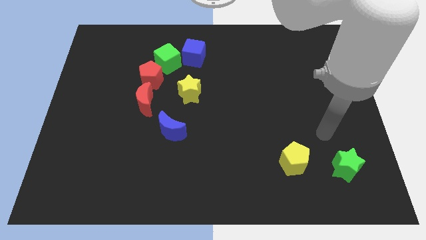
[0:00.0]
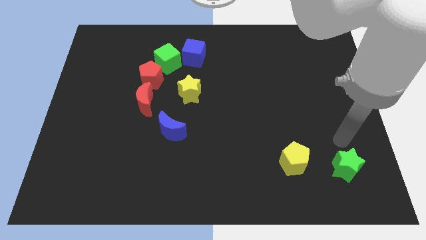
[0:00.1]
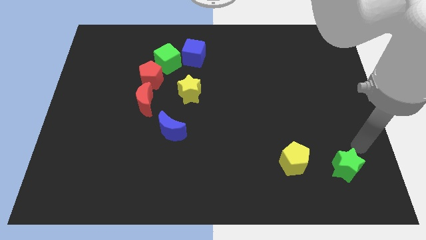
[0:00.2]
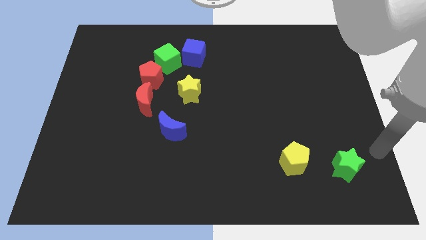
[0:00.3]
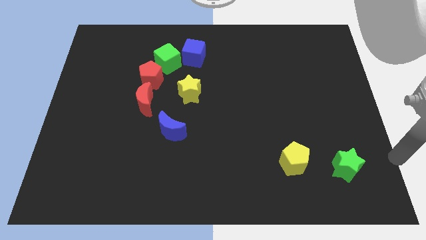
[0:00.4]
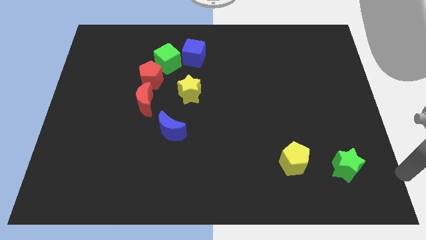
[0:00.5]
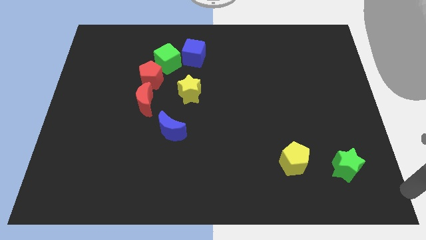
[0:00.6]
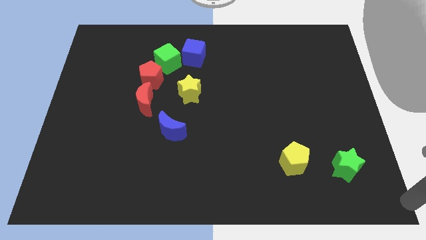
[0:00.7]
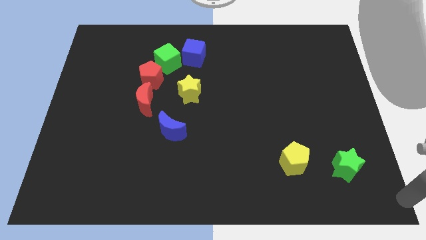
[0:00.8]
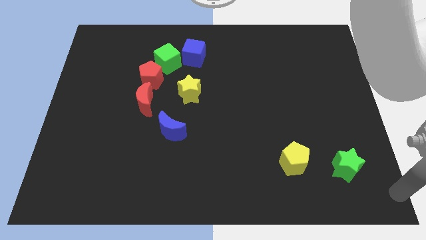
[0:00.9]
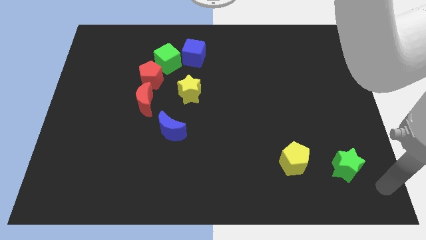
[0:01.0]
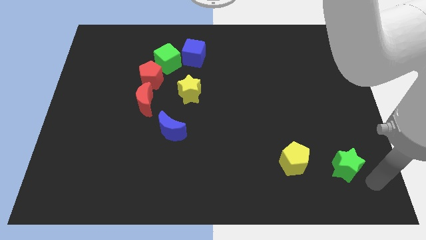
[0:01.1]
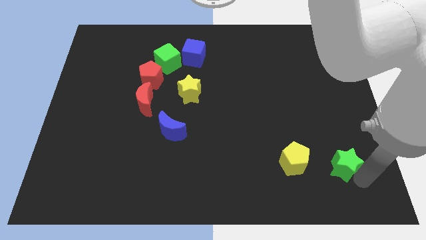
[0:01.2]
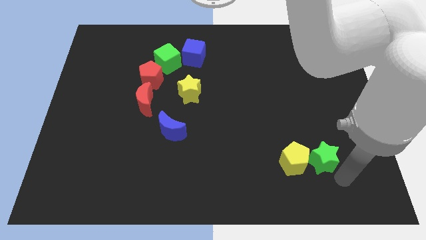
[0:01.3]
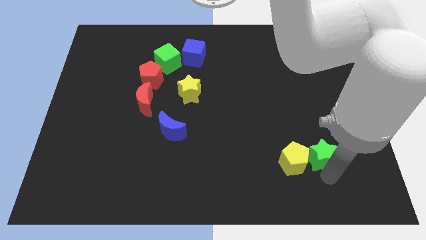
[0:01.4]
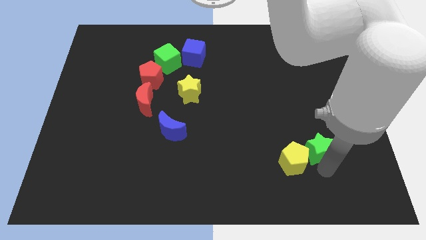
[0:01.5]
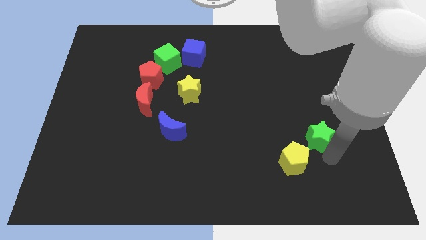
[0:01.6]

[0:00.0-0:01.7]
push green star close to the yellow pentagon

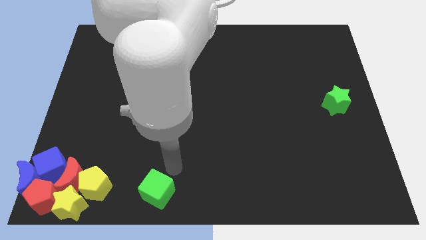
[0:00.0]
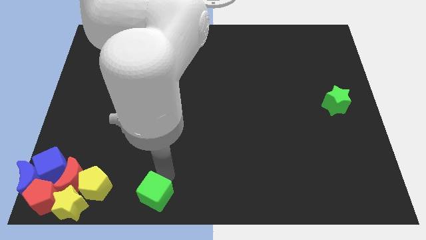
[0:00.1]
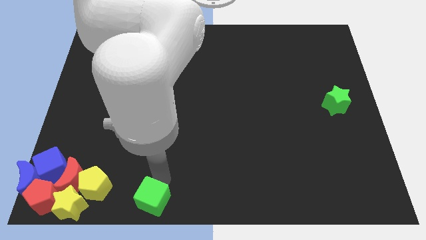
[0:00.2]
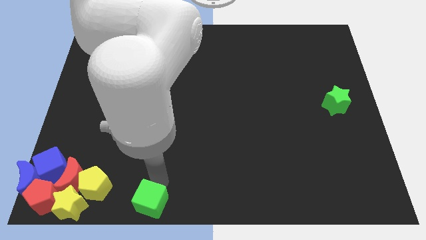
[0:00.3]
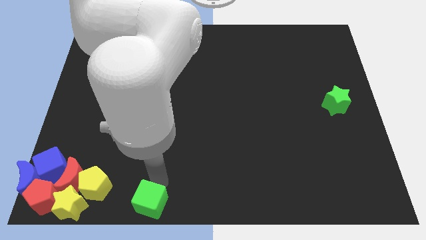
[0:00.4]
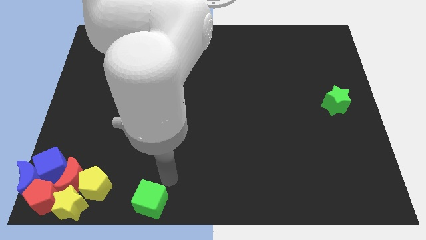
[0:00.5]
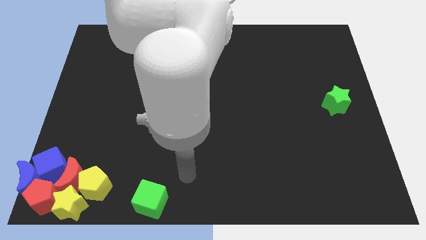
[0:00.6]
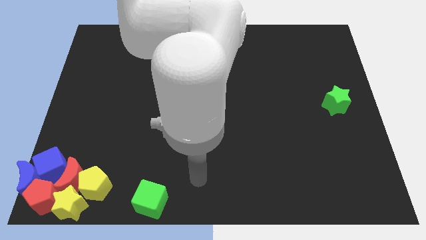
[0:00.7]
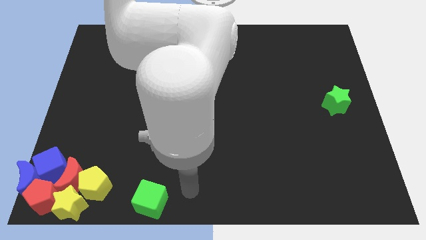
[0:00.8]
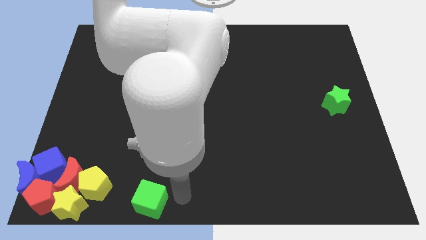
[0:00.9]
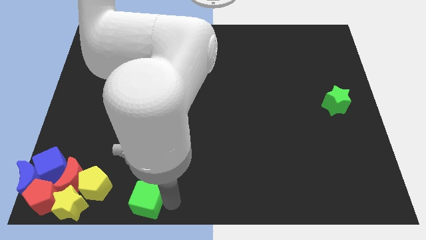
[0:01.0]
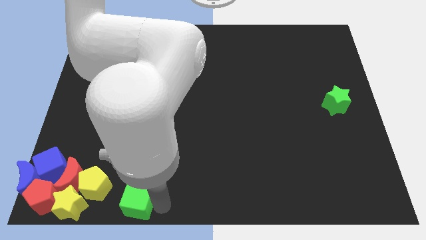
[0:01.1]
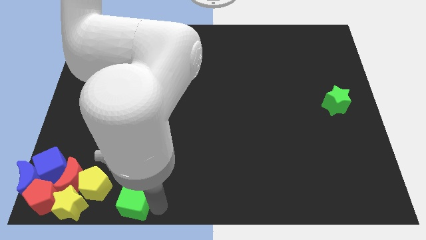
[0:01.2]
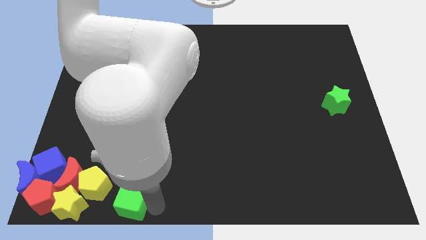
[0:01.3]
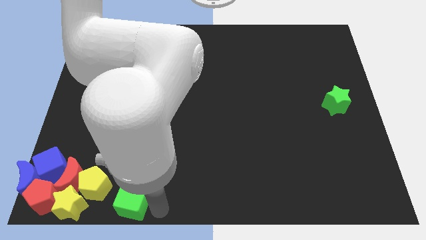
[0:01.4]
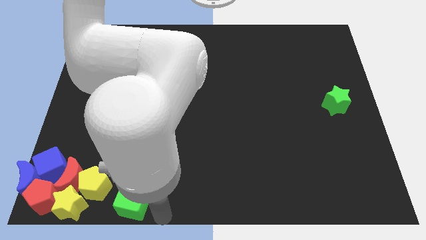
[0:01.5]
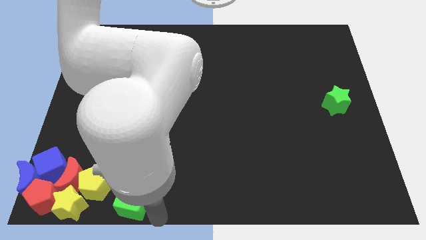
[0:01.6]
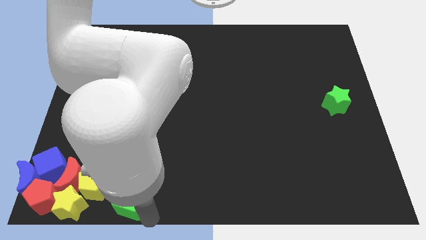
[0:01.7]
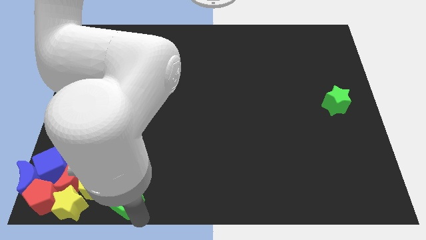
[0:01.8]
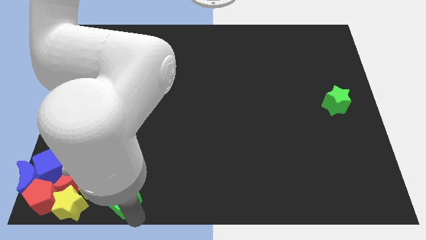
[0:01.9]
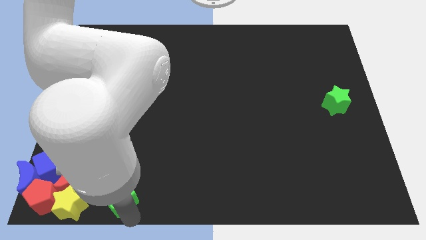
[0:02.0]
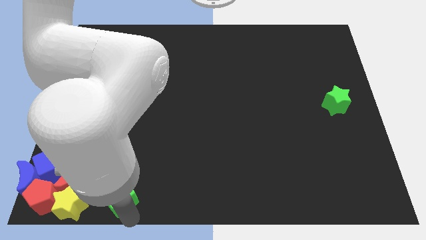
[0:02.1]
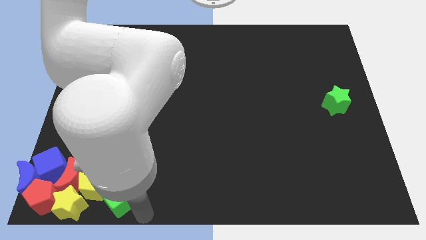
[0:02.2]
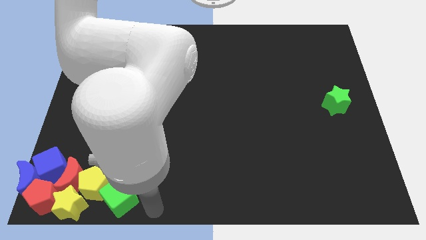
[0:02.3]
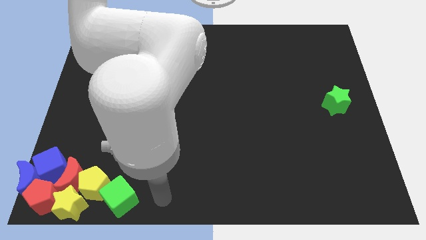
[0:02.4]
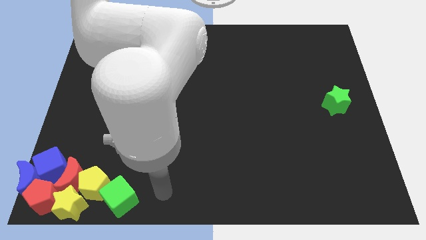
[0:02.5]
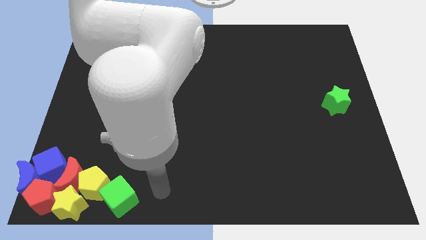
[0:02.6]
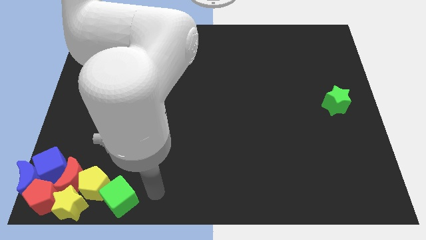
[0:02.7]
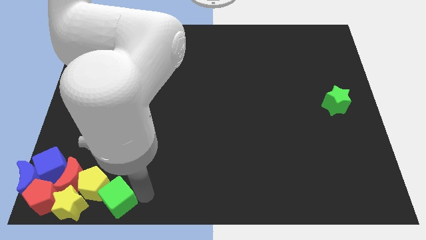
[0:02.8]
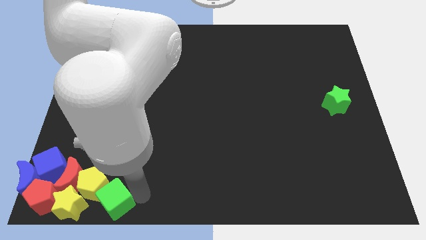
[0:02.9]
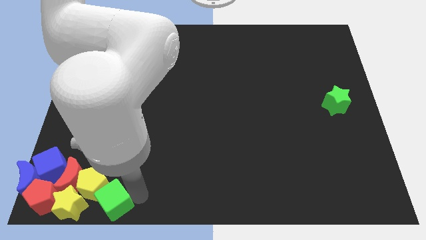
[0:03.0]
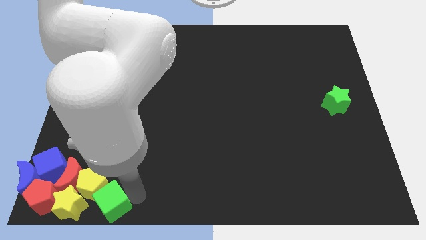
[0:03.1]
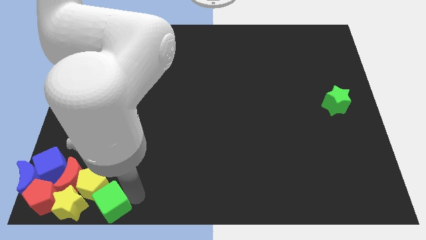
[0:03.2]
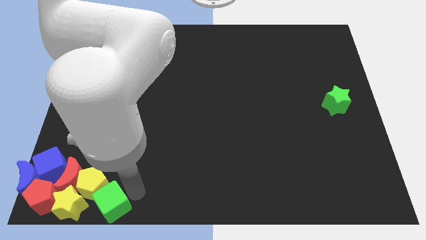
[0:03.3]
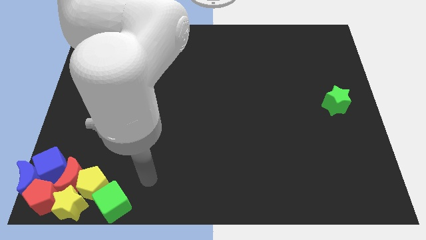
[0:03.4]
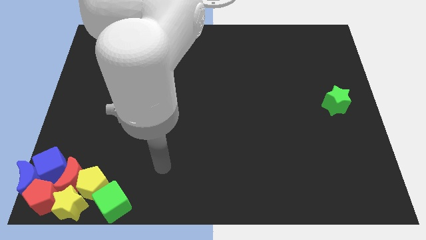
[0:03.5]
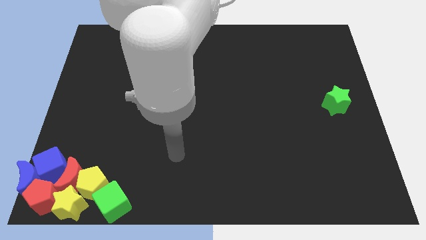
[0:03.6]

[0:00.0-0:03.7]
push the green cube into the yellow pentagon

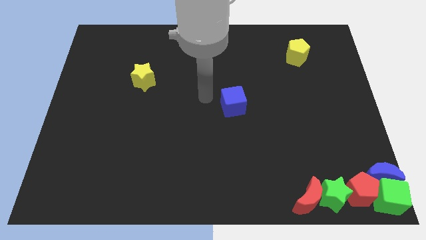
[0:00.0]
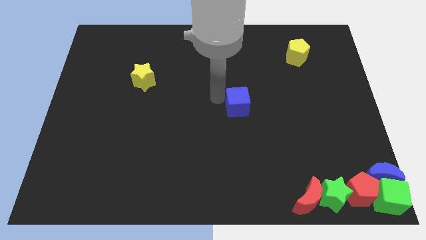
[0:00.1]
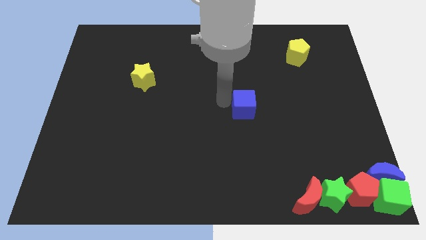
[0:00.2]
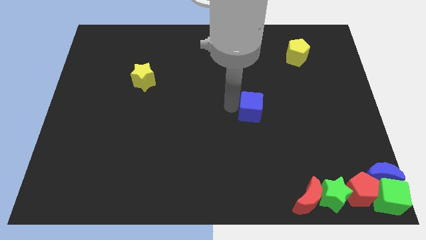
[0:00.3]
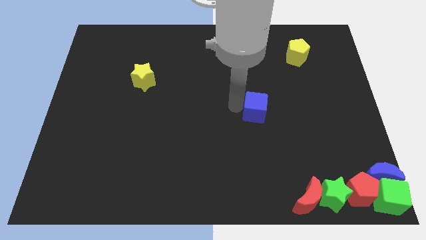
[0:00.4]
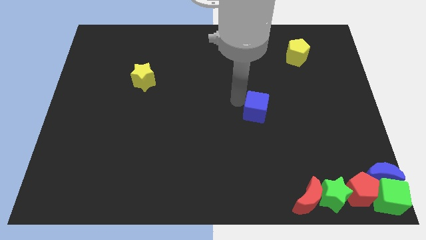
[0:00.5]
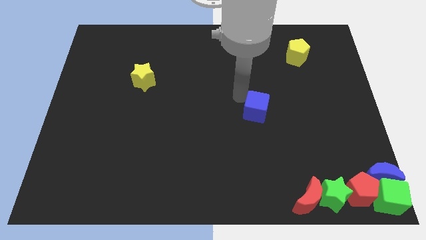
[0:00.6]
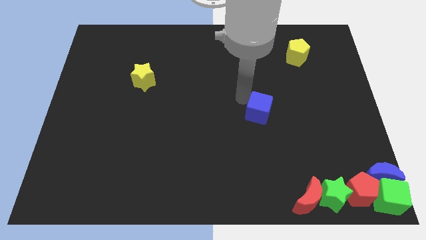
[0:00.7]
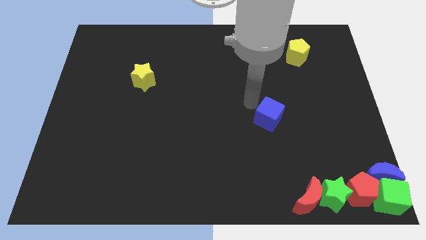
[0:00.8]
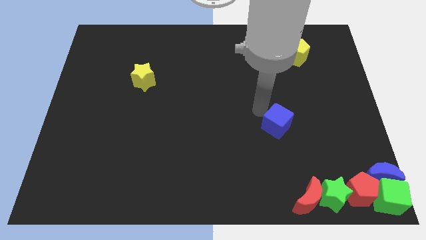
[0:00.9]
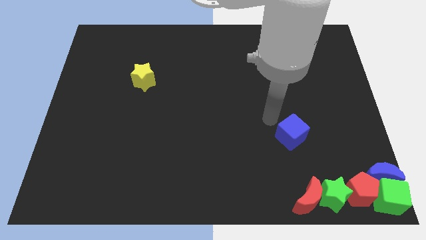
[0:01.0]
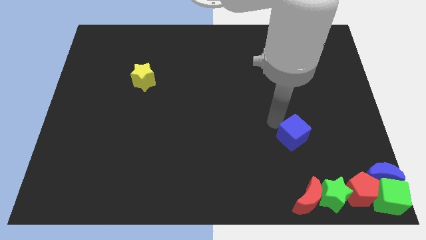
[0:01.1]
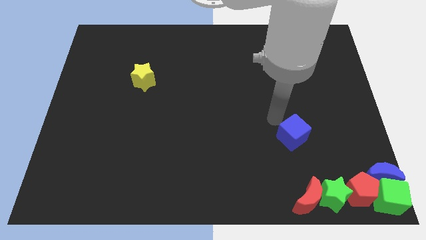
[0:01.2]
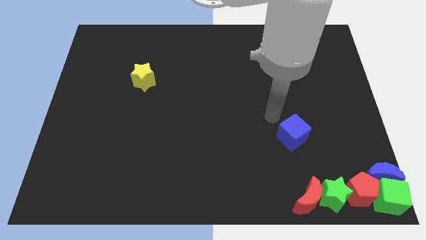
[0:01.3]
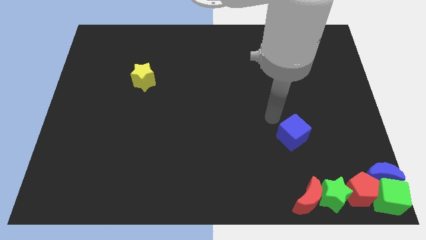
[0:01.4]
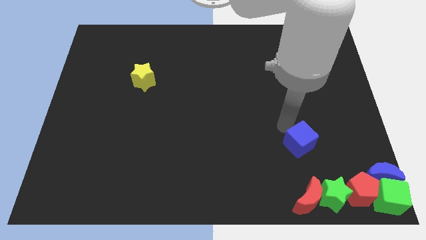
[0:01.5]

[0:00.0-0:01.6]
push the blue moon parallel to the top of the blue cube

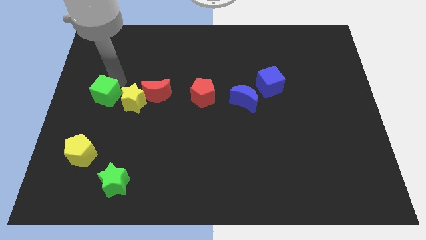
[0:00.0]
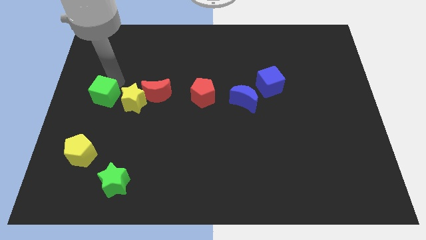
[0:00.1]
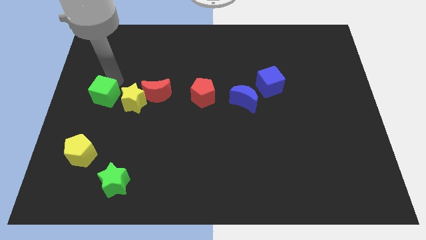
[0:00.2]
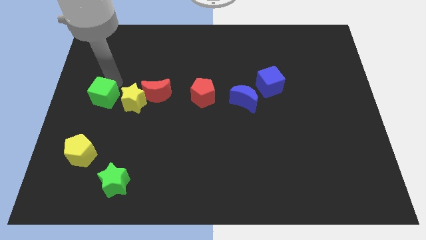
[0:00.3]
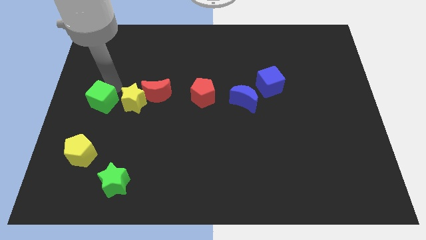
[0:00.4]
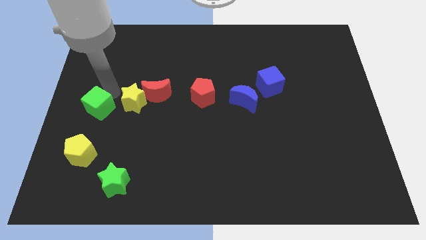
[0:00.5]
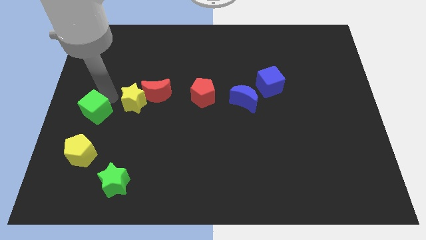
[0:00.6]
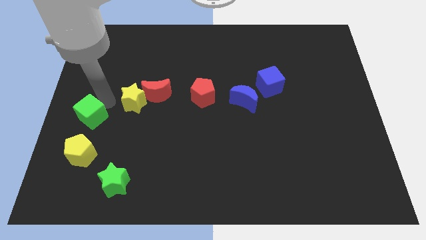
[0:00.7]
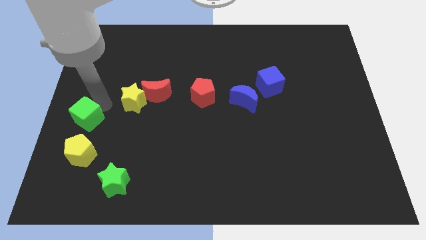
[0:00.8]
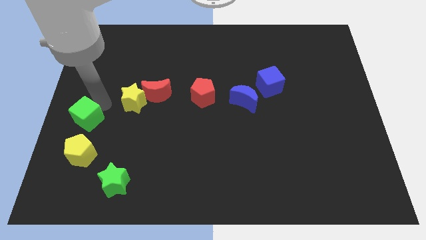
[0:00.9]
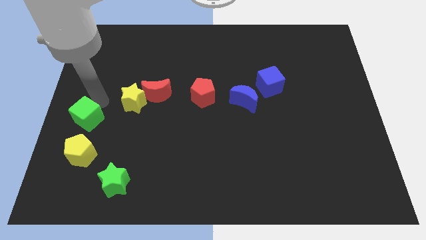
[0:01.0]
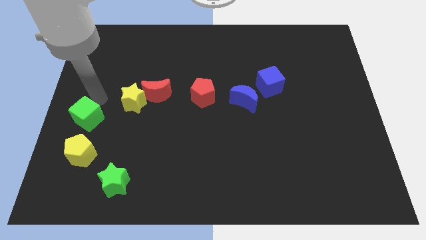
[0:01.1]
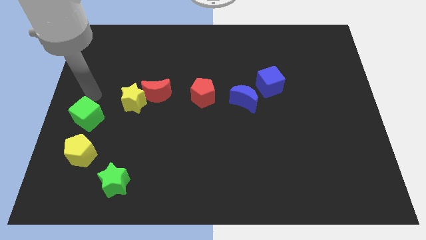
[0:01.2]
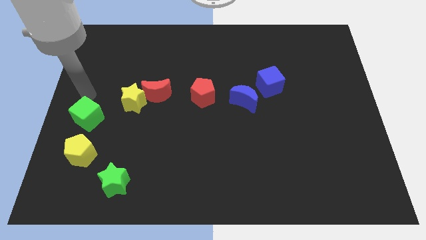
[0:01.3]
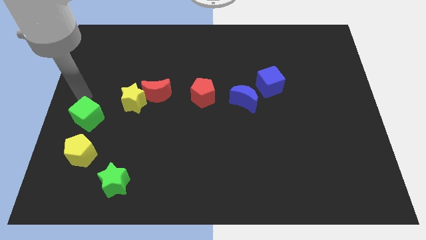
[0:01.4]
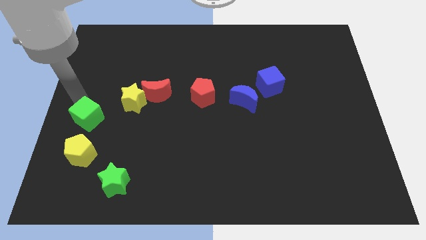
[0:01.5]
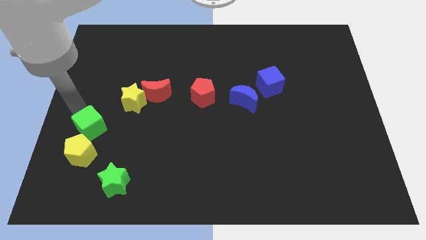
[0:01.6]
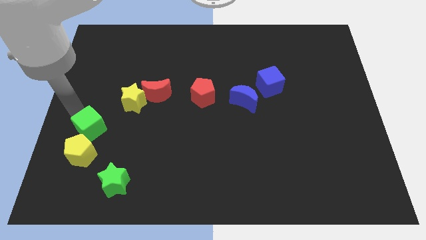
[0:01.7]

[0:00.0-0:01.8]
move the green cube right above the yellow pentagon
